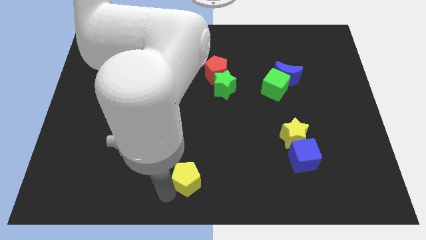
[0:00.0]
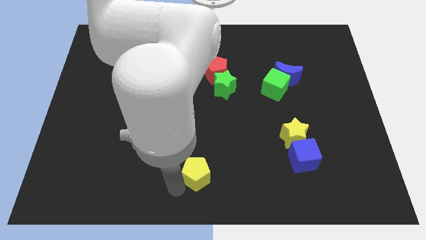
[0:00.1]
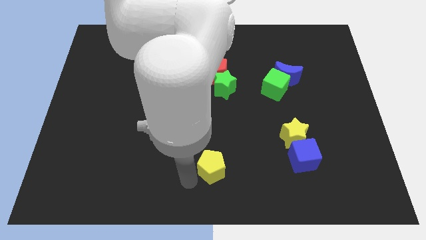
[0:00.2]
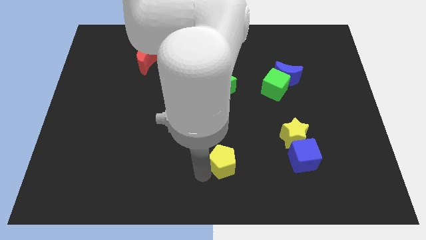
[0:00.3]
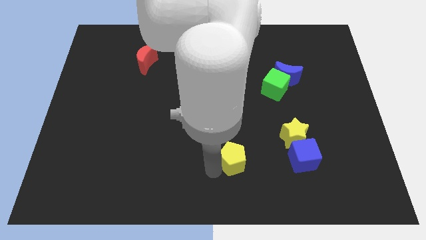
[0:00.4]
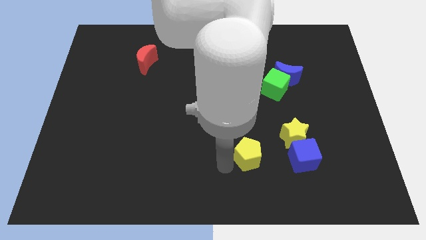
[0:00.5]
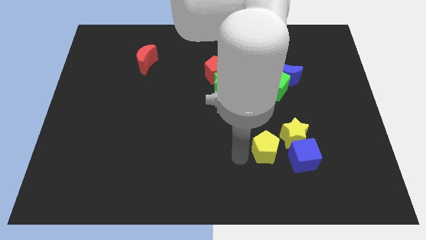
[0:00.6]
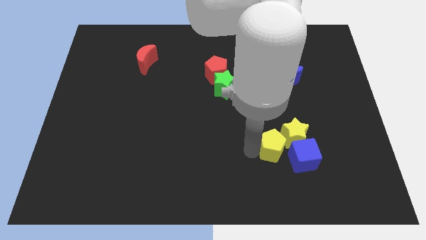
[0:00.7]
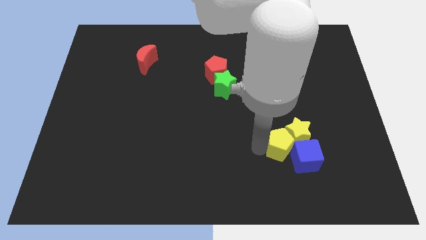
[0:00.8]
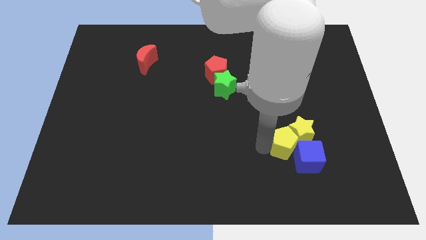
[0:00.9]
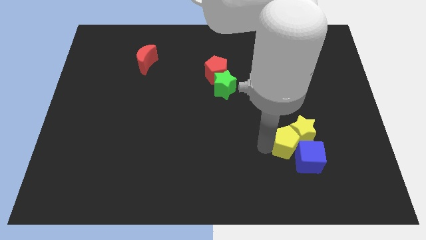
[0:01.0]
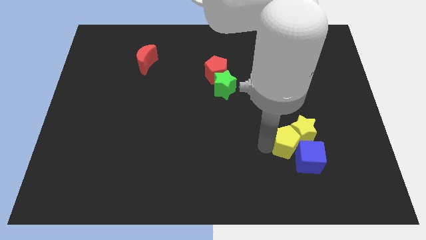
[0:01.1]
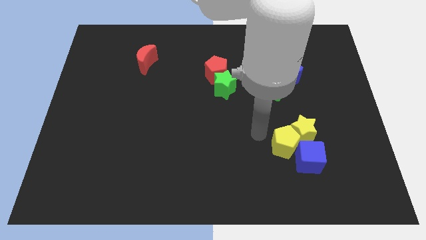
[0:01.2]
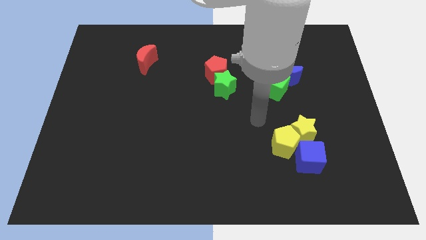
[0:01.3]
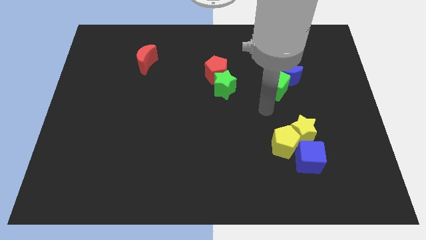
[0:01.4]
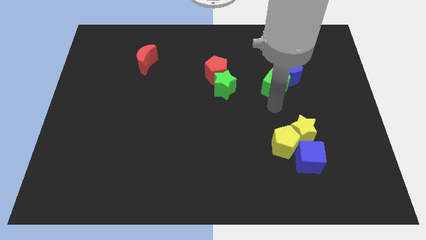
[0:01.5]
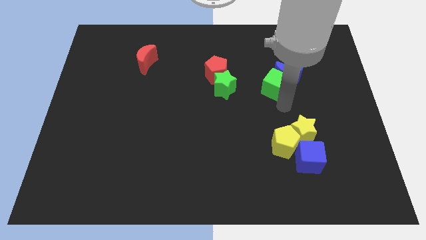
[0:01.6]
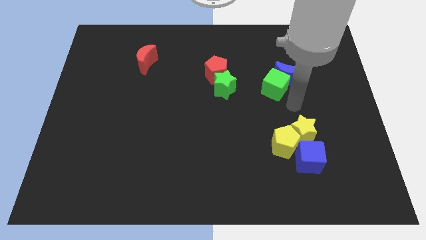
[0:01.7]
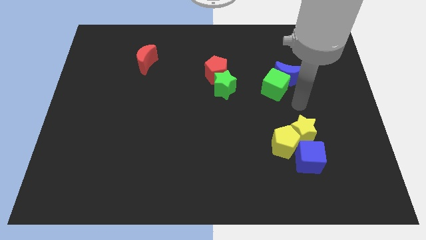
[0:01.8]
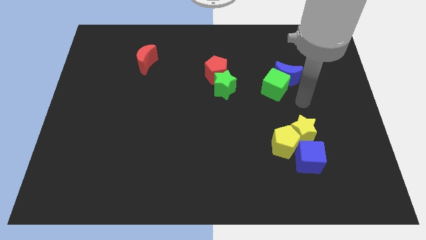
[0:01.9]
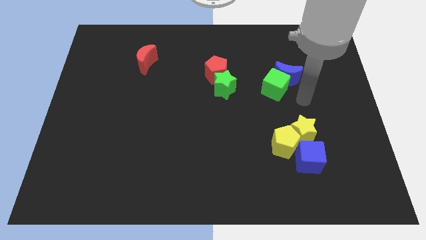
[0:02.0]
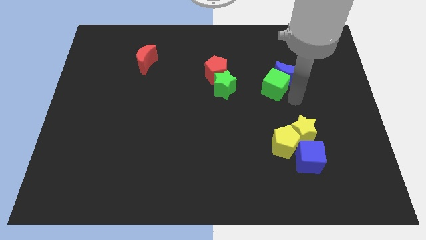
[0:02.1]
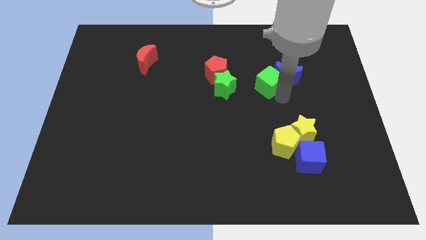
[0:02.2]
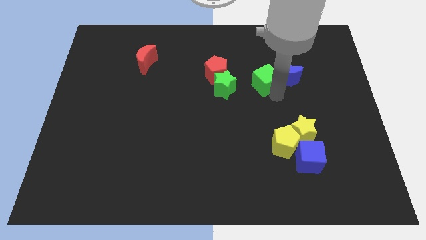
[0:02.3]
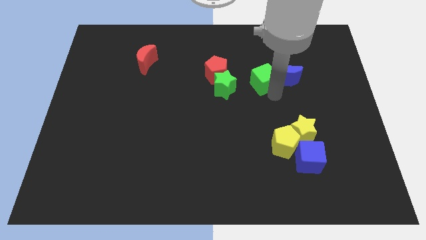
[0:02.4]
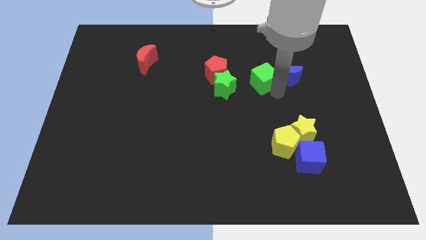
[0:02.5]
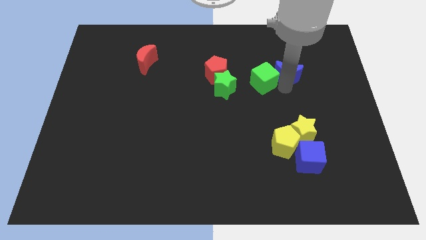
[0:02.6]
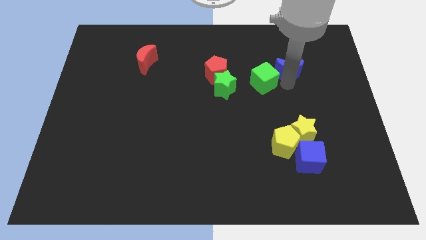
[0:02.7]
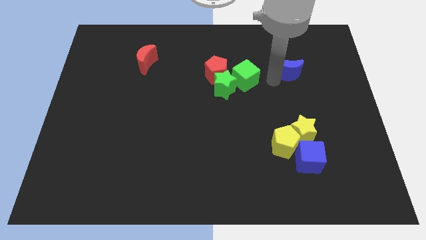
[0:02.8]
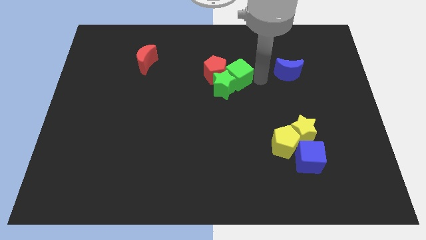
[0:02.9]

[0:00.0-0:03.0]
push green cube towards red pentagon

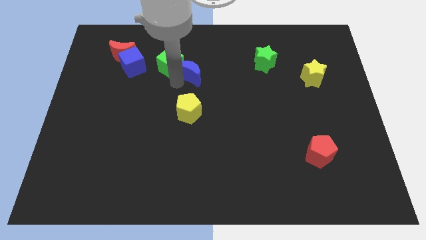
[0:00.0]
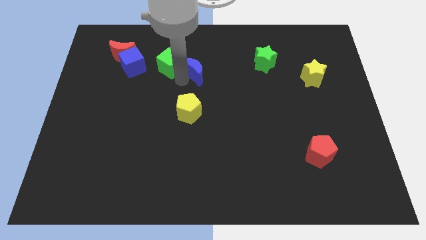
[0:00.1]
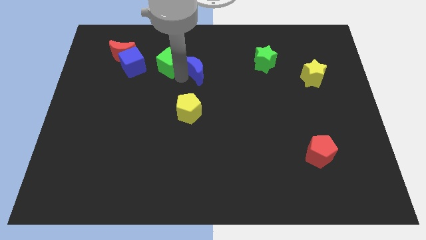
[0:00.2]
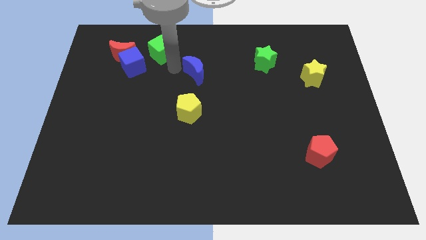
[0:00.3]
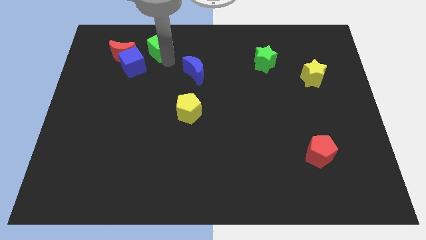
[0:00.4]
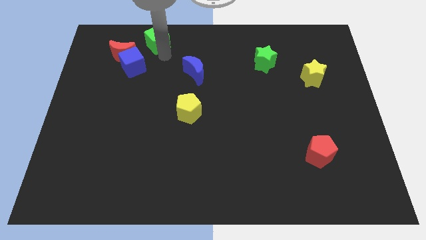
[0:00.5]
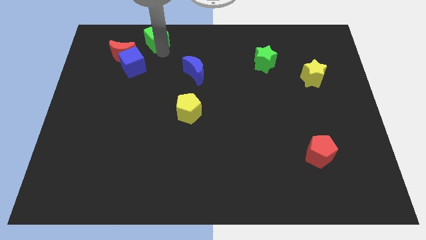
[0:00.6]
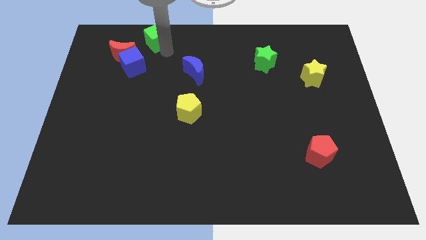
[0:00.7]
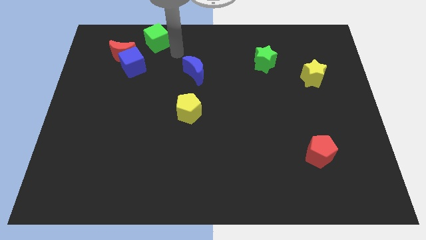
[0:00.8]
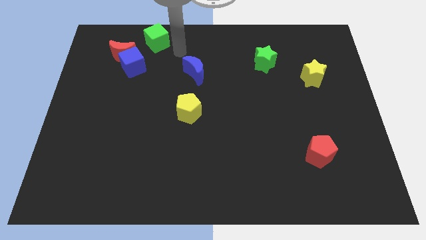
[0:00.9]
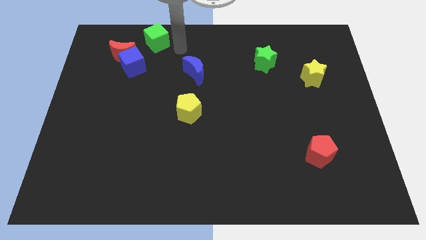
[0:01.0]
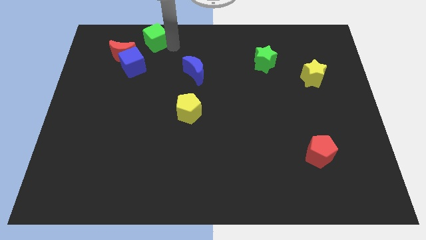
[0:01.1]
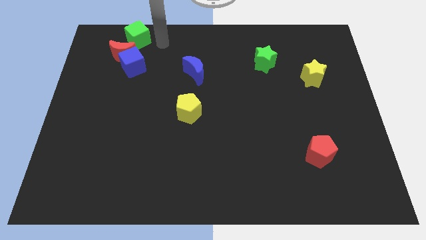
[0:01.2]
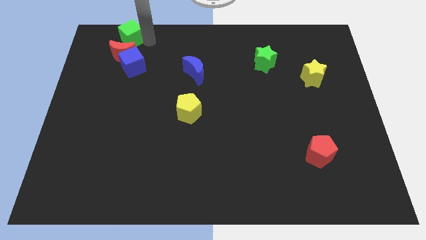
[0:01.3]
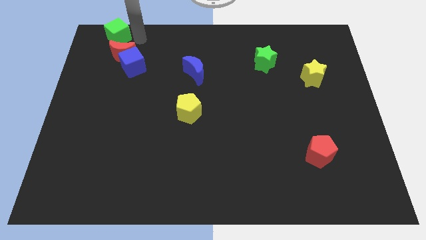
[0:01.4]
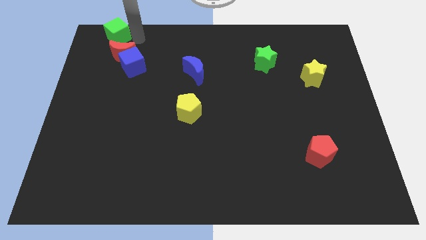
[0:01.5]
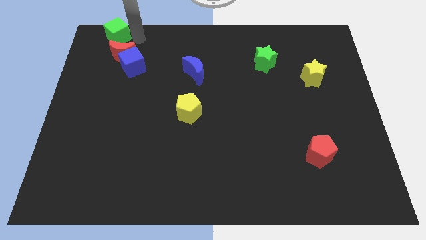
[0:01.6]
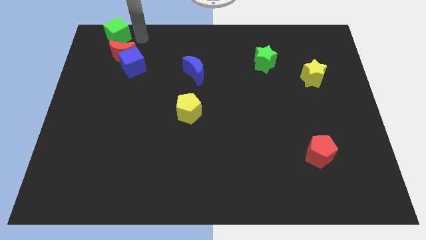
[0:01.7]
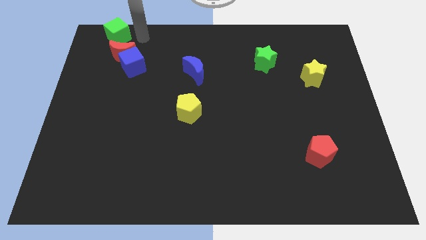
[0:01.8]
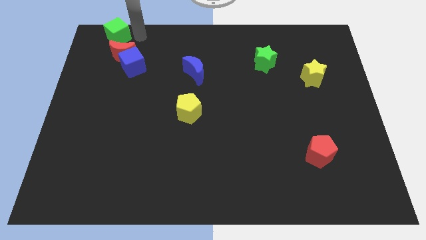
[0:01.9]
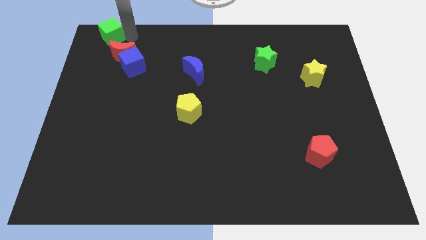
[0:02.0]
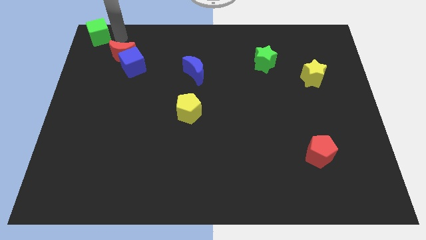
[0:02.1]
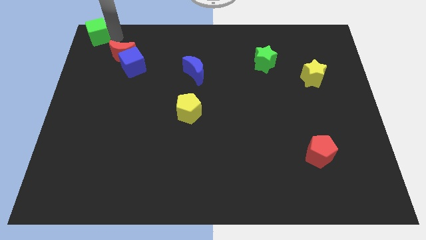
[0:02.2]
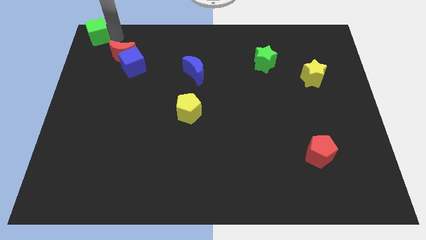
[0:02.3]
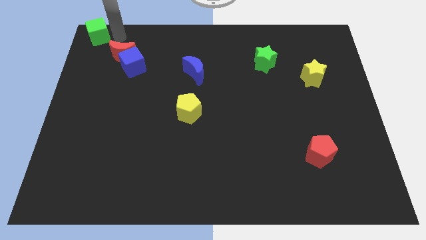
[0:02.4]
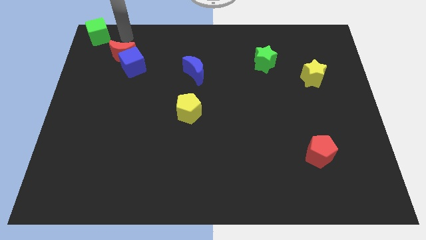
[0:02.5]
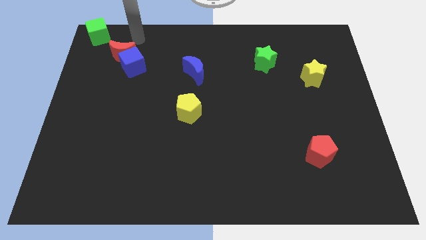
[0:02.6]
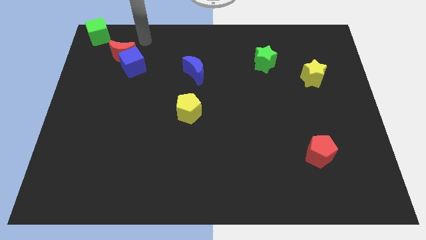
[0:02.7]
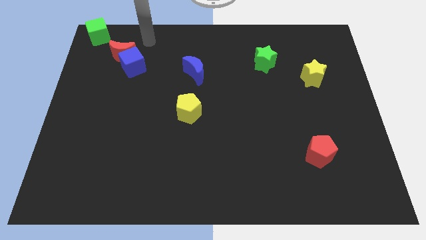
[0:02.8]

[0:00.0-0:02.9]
push the green cube top left corner of the board

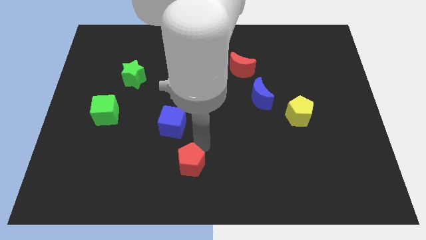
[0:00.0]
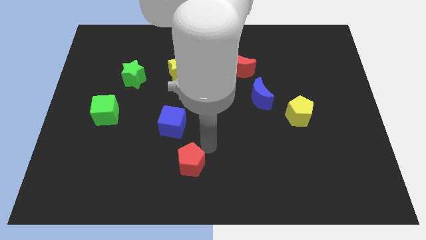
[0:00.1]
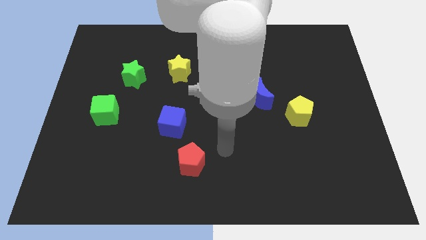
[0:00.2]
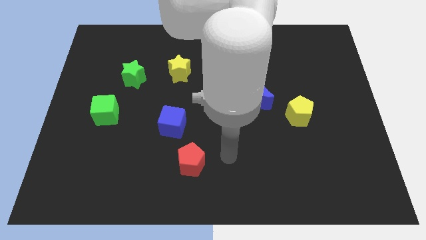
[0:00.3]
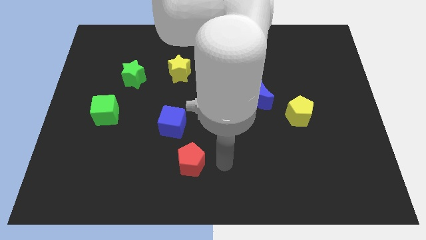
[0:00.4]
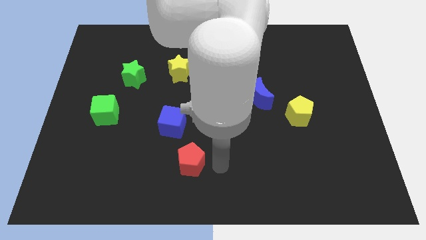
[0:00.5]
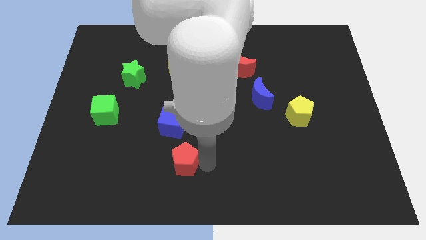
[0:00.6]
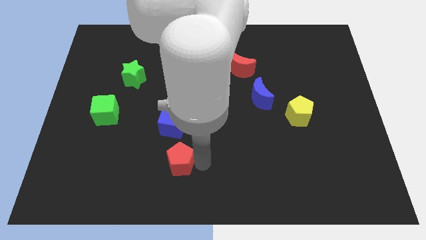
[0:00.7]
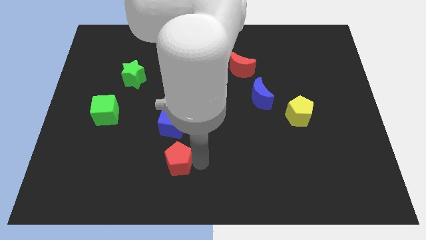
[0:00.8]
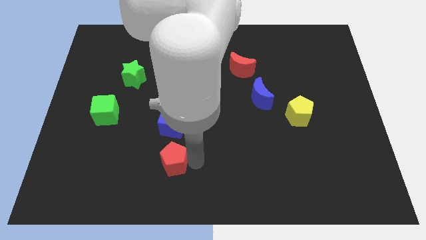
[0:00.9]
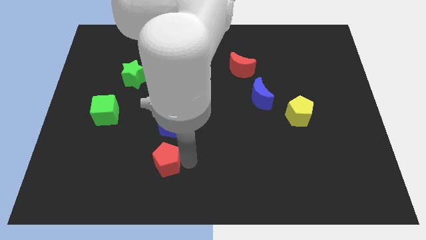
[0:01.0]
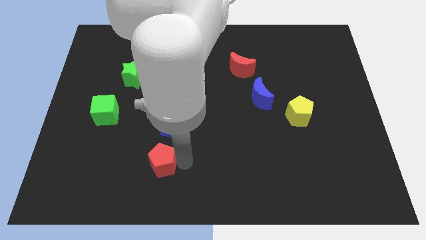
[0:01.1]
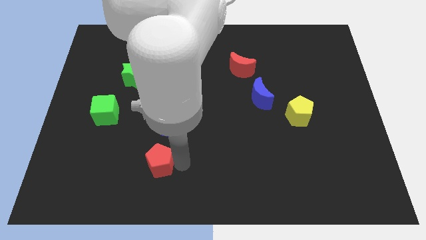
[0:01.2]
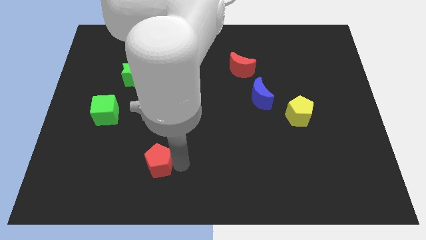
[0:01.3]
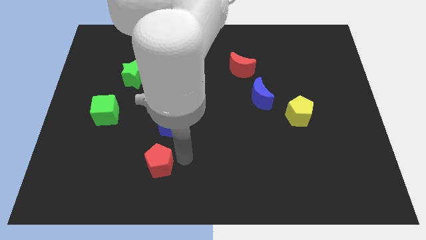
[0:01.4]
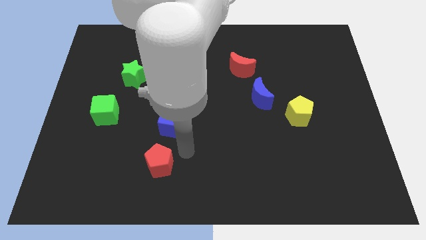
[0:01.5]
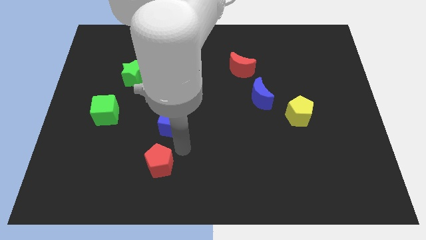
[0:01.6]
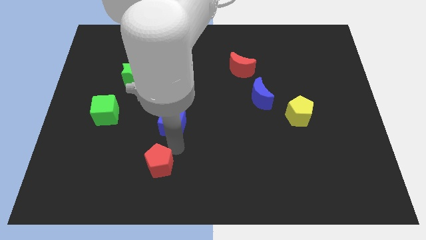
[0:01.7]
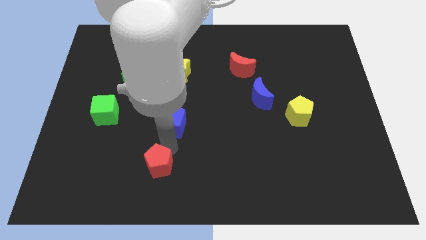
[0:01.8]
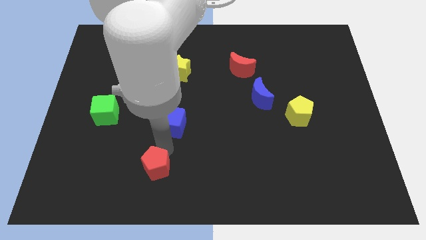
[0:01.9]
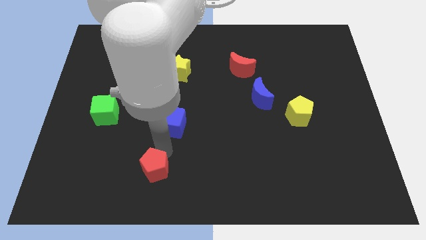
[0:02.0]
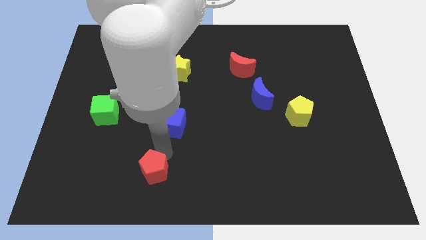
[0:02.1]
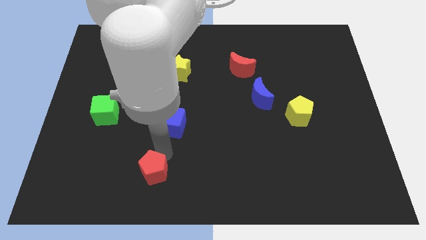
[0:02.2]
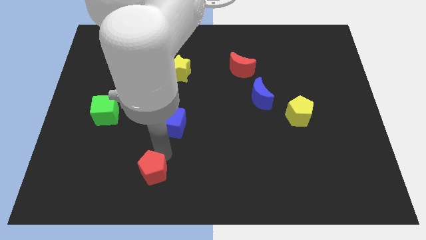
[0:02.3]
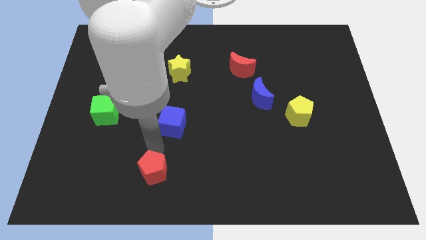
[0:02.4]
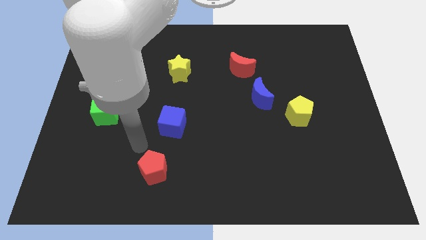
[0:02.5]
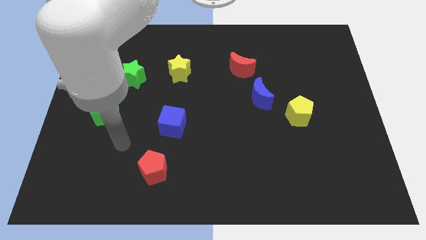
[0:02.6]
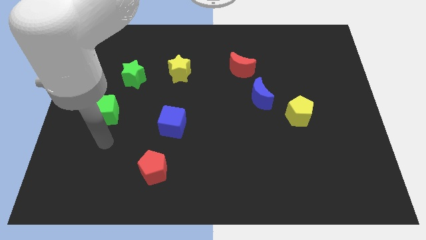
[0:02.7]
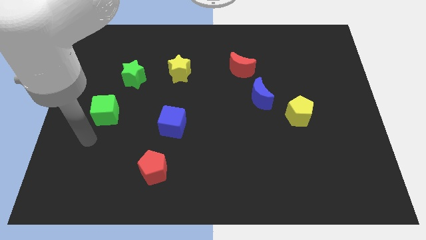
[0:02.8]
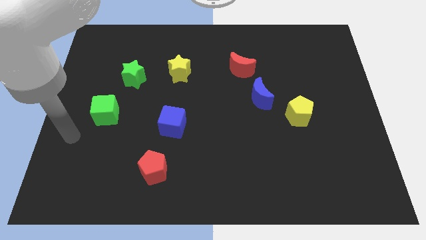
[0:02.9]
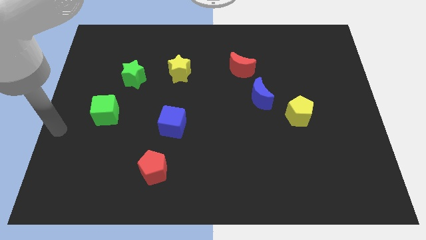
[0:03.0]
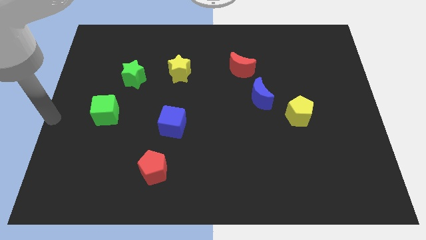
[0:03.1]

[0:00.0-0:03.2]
put the red pentagon diagonally bottom right to the green cube

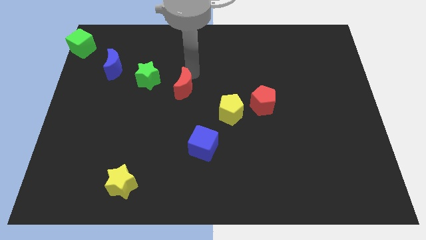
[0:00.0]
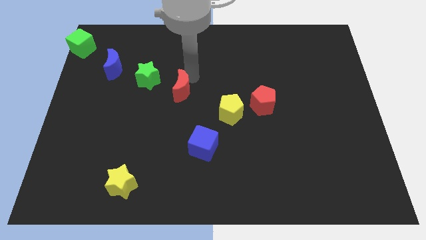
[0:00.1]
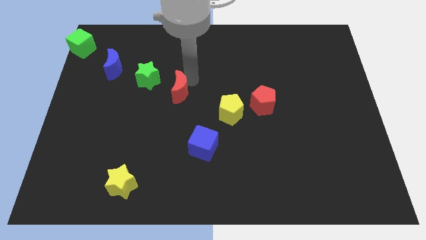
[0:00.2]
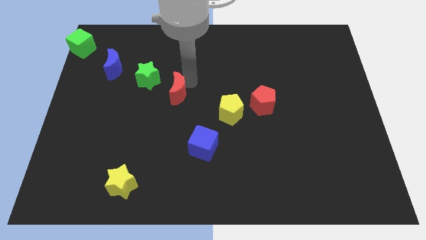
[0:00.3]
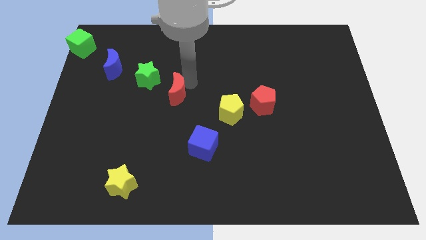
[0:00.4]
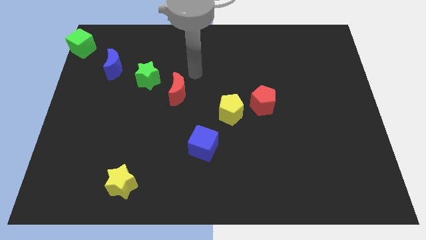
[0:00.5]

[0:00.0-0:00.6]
place the red crescent below green star
